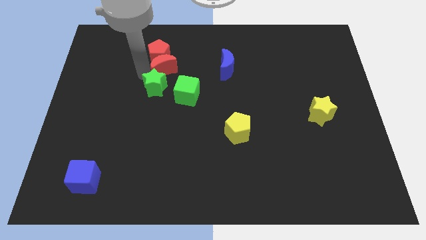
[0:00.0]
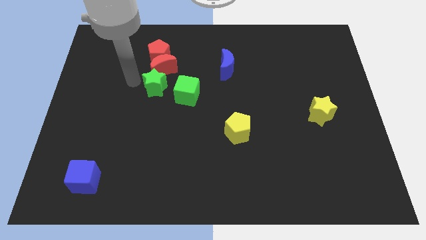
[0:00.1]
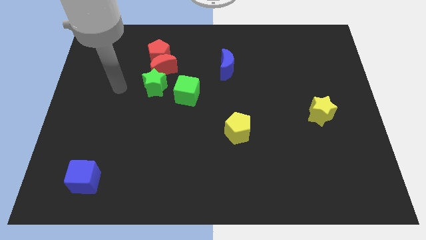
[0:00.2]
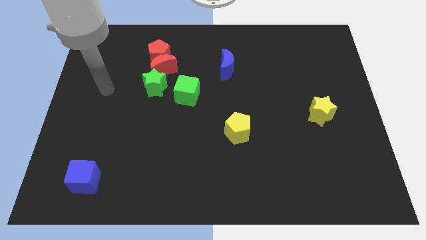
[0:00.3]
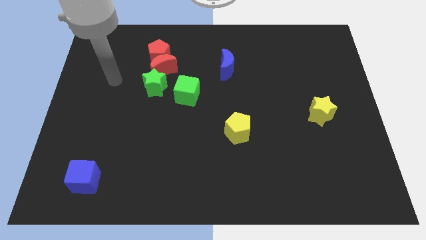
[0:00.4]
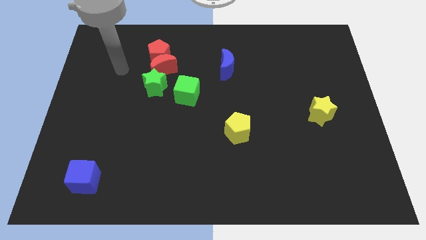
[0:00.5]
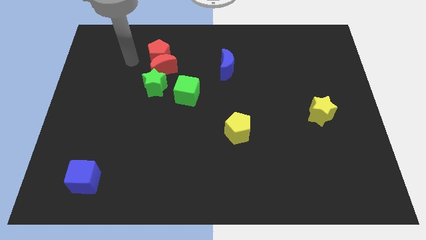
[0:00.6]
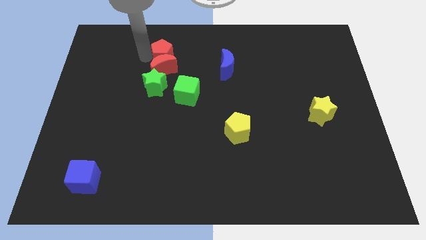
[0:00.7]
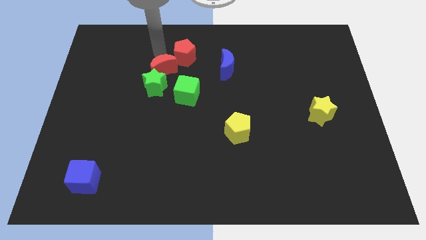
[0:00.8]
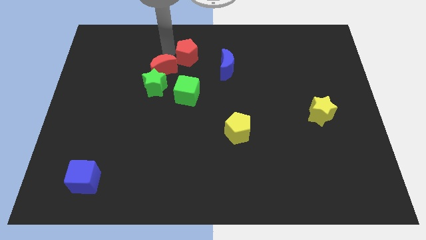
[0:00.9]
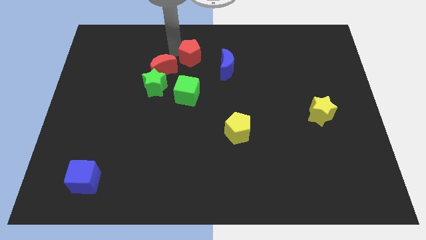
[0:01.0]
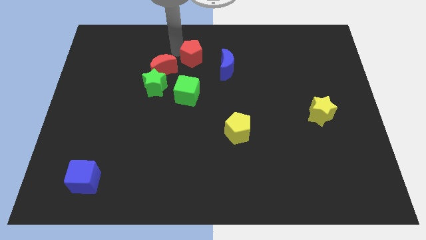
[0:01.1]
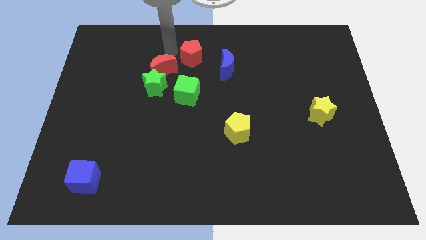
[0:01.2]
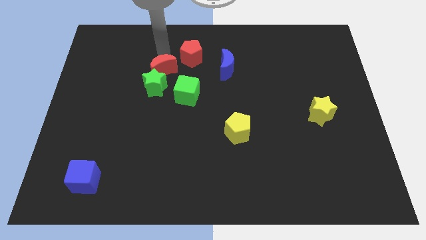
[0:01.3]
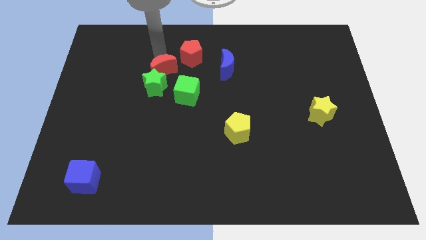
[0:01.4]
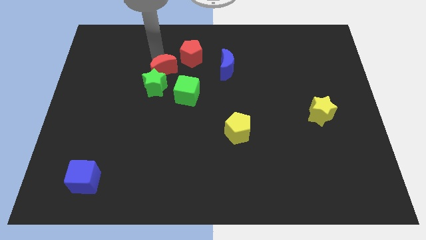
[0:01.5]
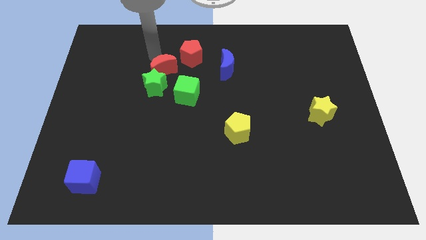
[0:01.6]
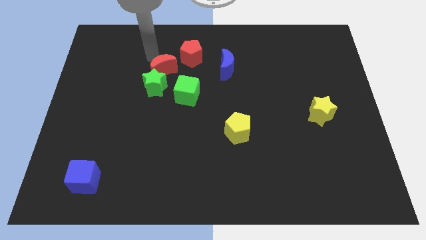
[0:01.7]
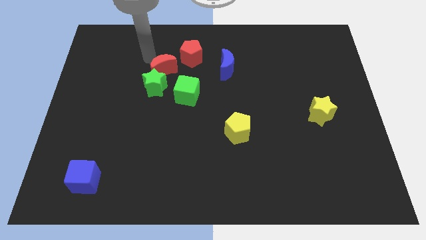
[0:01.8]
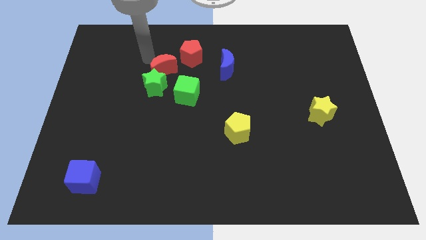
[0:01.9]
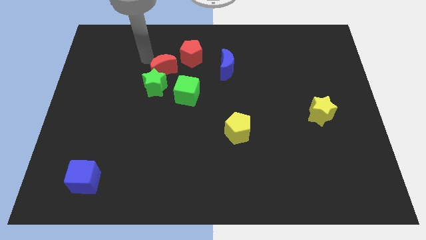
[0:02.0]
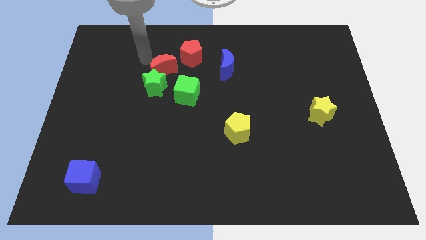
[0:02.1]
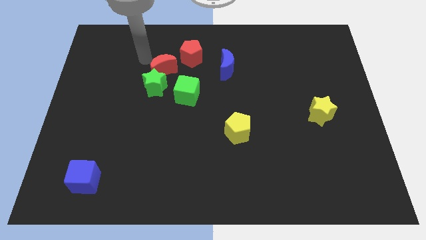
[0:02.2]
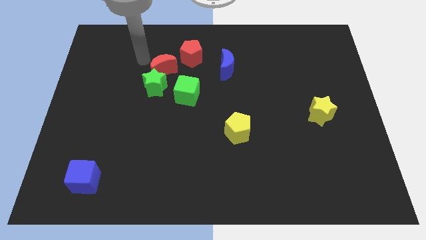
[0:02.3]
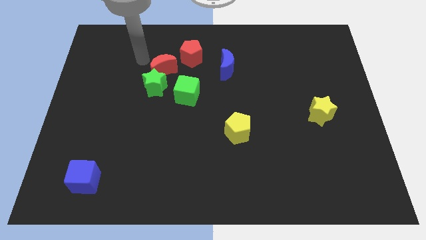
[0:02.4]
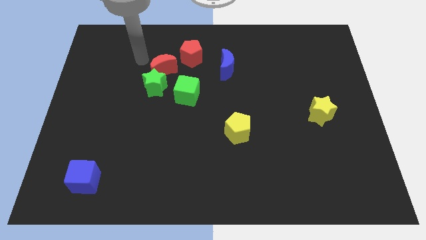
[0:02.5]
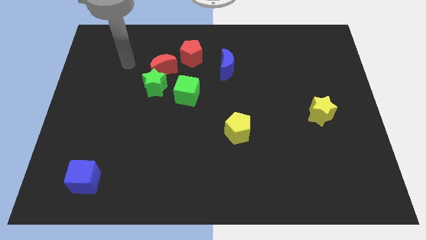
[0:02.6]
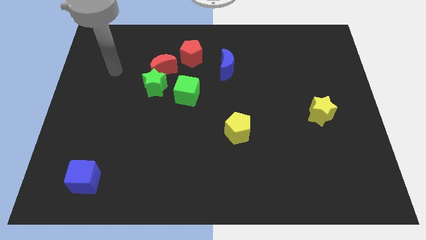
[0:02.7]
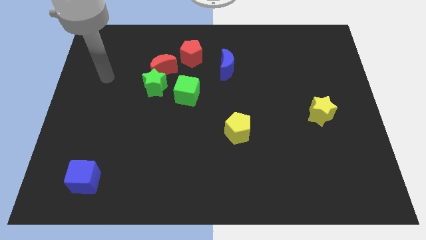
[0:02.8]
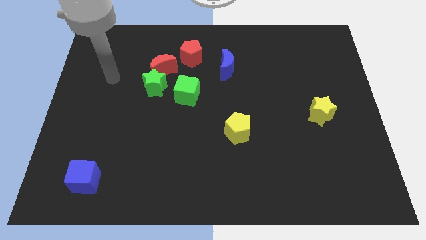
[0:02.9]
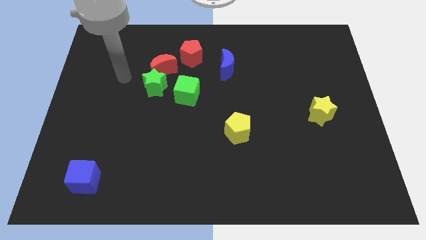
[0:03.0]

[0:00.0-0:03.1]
separate red pentagon from red moon

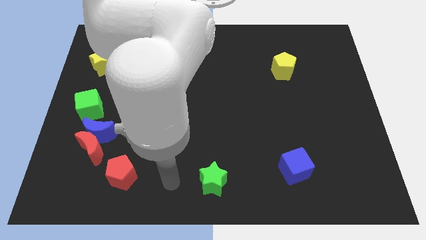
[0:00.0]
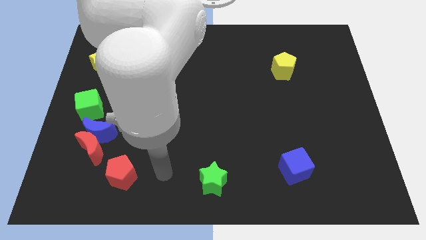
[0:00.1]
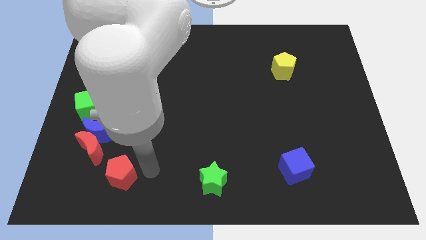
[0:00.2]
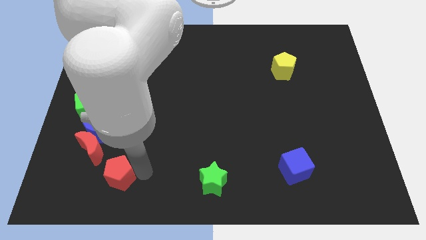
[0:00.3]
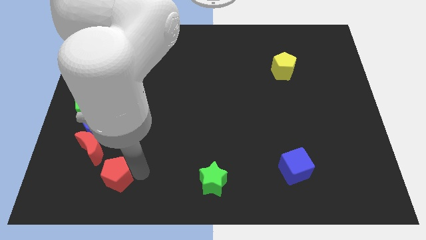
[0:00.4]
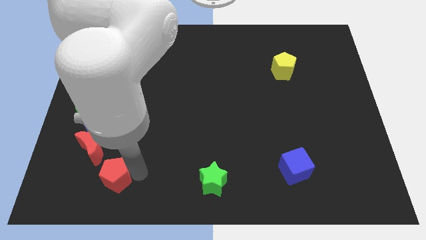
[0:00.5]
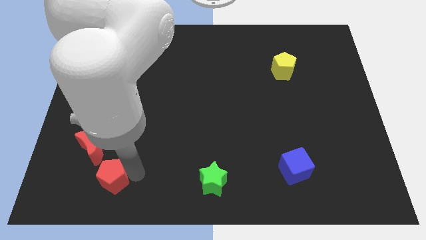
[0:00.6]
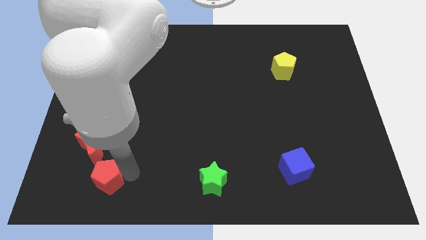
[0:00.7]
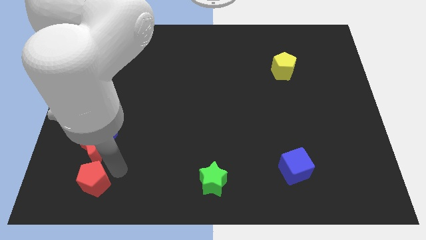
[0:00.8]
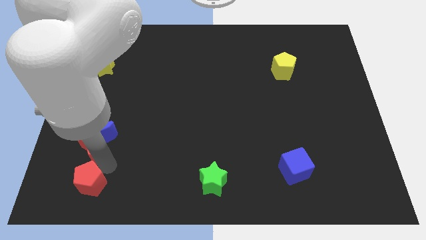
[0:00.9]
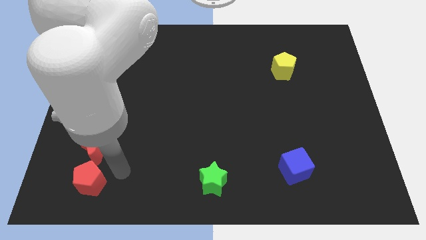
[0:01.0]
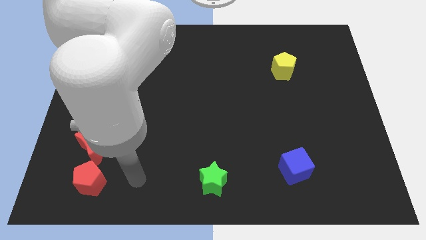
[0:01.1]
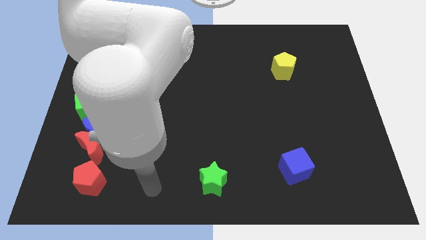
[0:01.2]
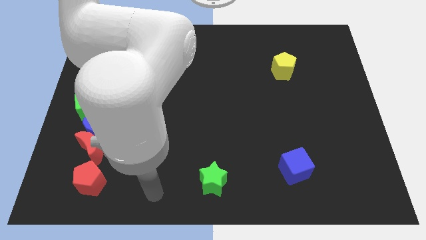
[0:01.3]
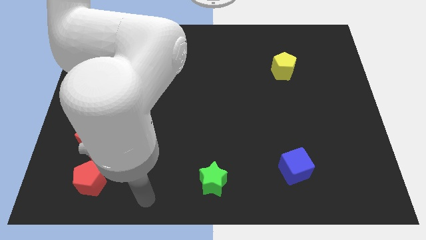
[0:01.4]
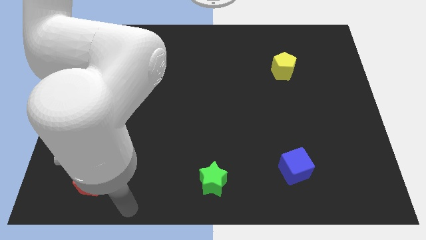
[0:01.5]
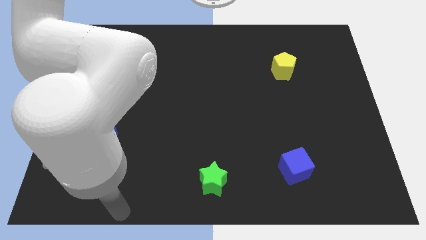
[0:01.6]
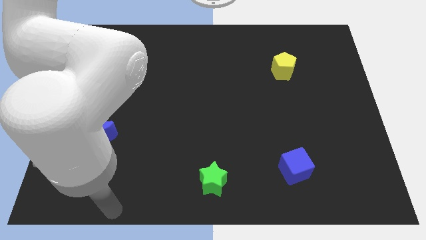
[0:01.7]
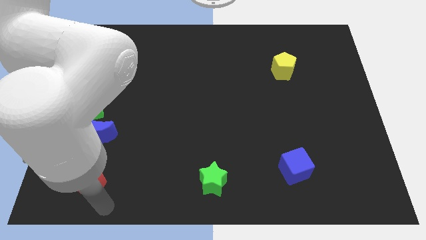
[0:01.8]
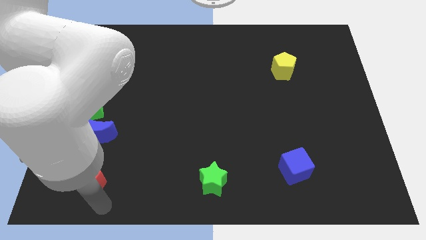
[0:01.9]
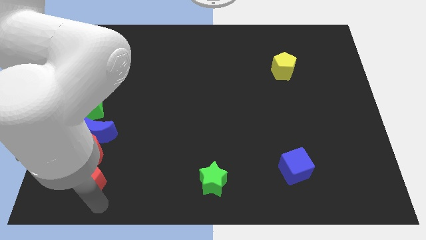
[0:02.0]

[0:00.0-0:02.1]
place the red pentagon towards the bottom of the red crescent

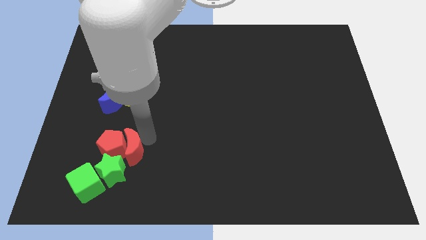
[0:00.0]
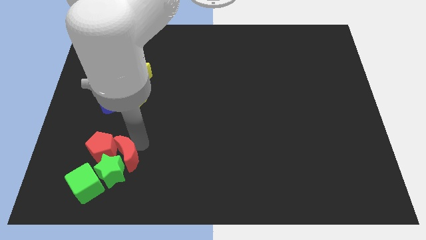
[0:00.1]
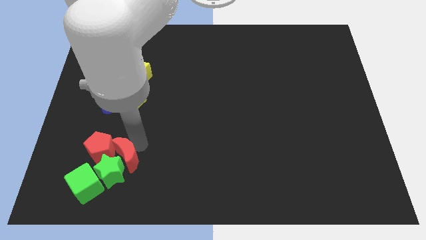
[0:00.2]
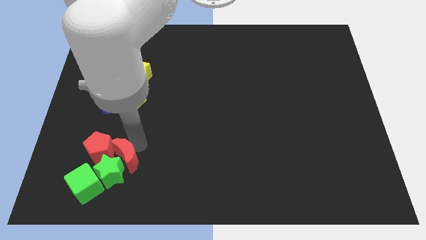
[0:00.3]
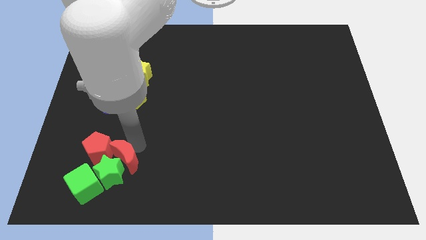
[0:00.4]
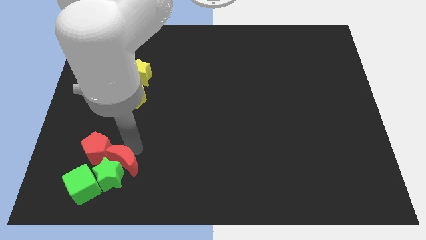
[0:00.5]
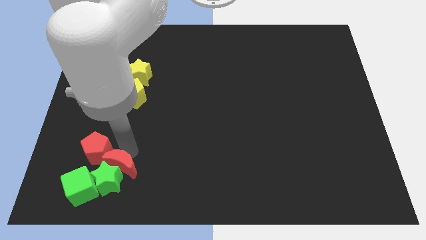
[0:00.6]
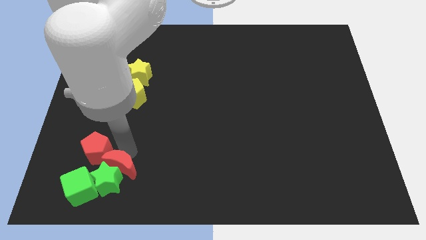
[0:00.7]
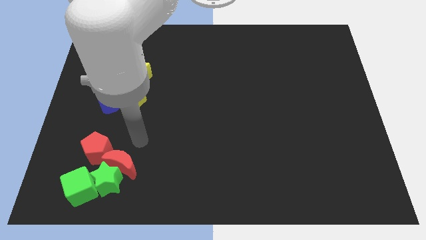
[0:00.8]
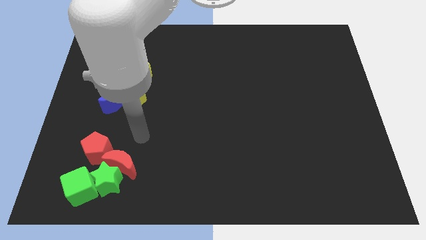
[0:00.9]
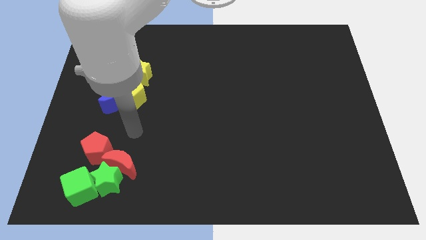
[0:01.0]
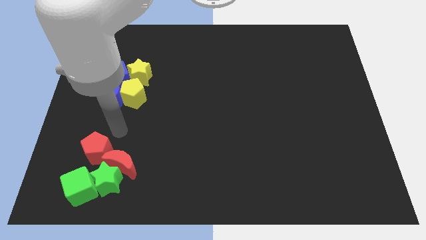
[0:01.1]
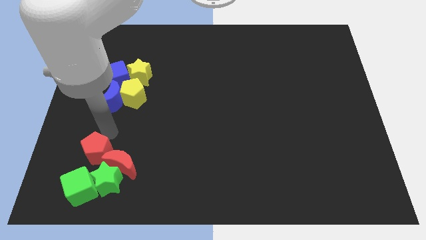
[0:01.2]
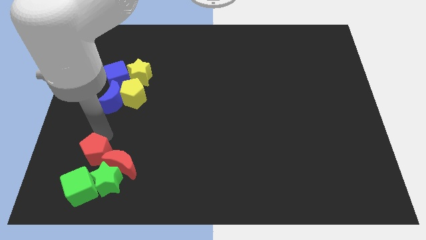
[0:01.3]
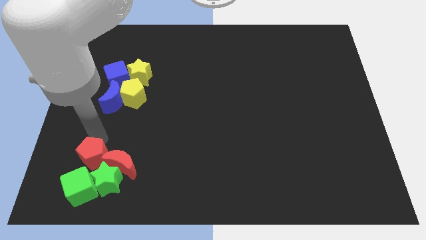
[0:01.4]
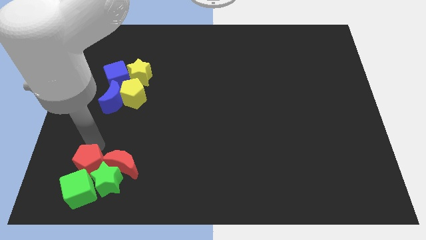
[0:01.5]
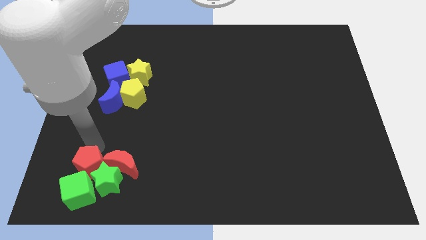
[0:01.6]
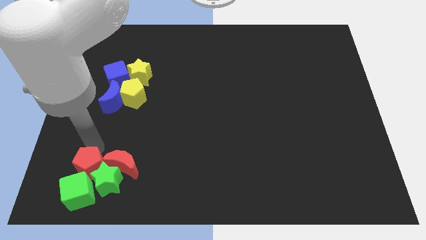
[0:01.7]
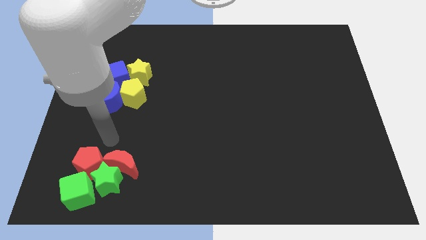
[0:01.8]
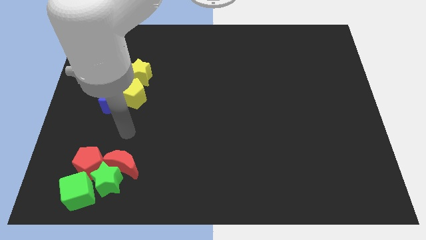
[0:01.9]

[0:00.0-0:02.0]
push the red crescent and red pentagon towards the bottom

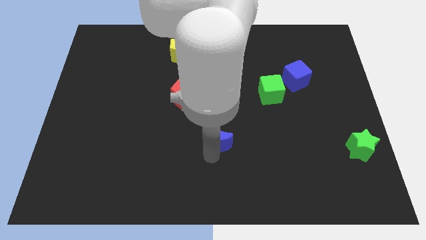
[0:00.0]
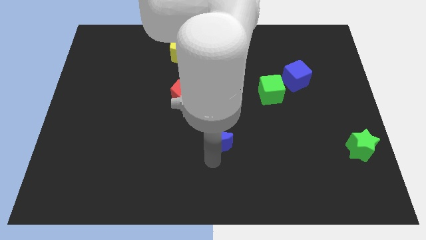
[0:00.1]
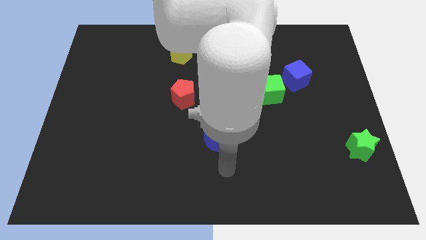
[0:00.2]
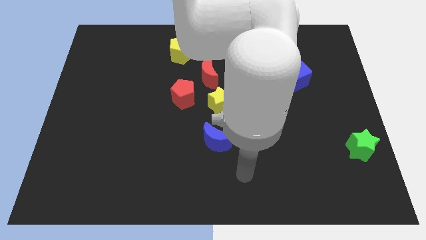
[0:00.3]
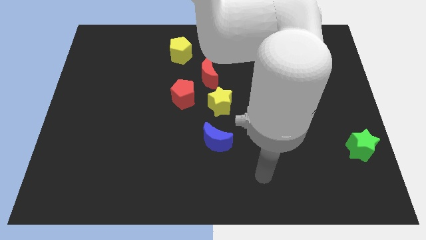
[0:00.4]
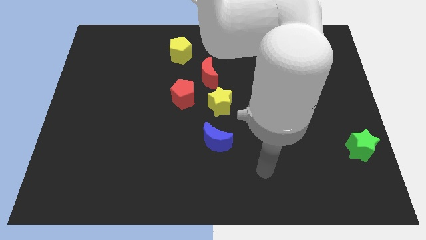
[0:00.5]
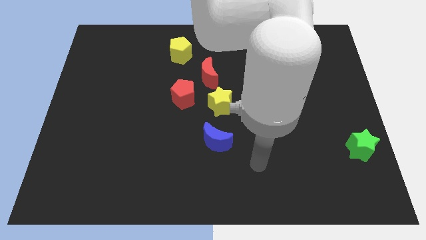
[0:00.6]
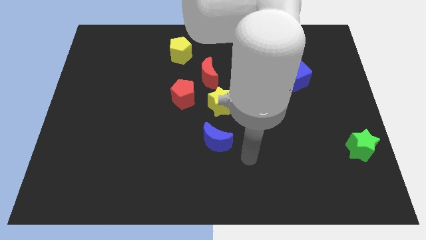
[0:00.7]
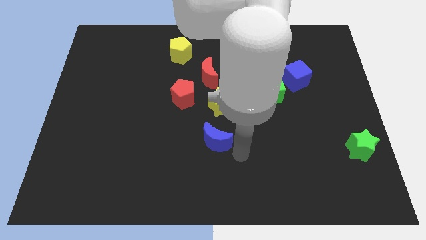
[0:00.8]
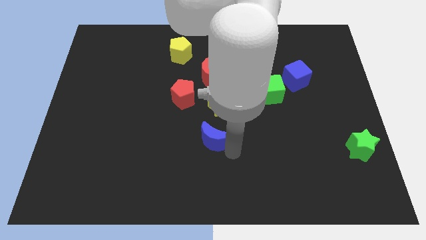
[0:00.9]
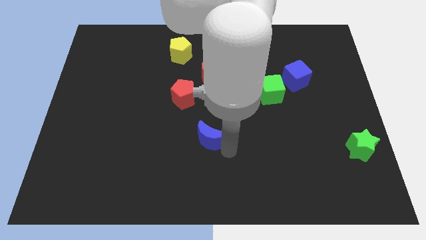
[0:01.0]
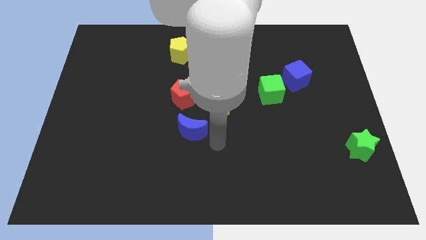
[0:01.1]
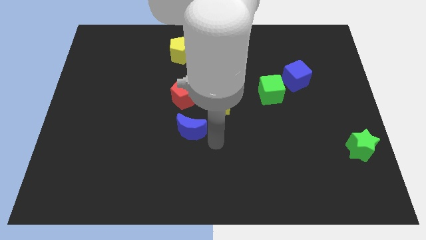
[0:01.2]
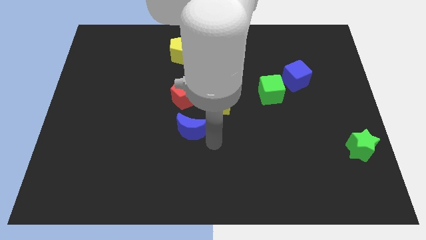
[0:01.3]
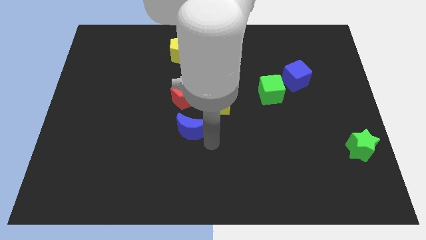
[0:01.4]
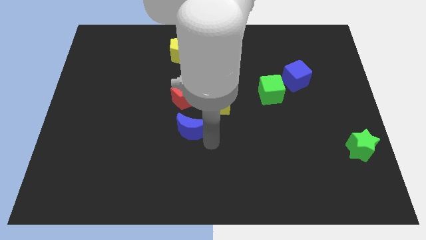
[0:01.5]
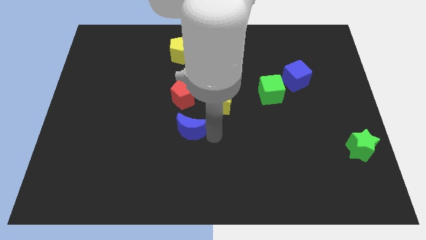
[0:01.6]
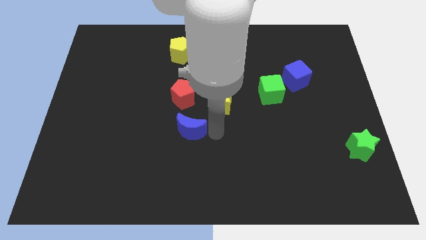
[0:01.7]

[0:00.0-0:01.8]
move the blue moon underneath the red pentagon
